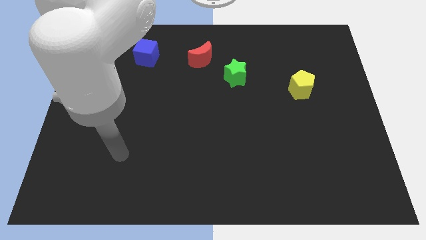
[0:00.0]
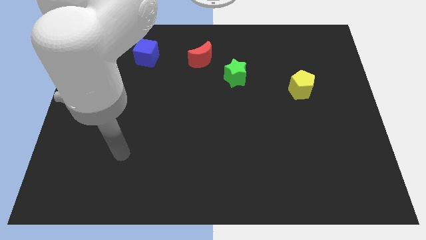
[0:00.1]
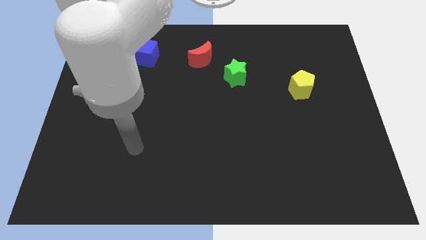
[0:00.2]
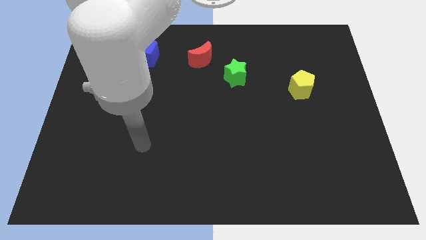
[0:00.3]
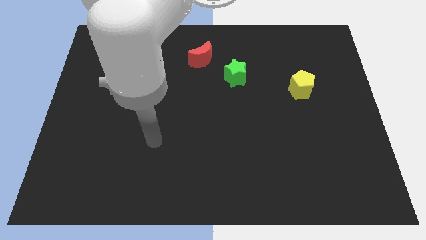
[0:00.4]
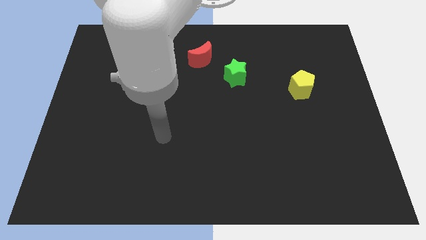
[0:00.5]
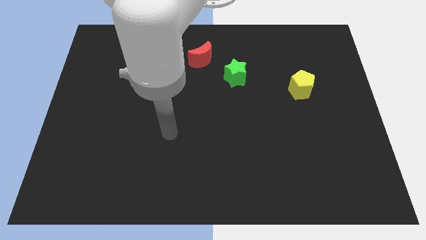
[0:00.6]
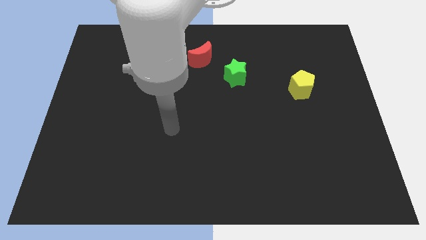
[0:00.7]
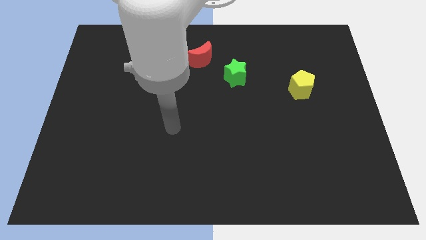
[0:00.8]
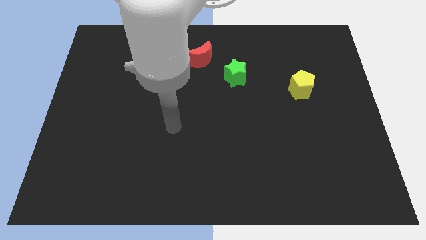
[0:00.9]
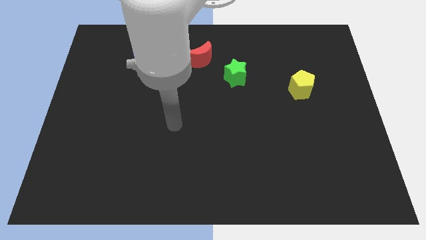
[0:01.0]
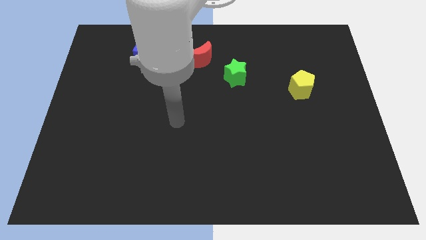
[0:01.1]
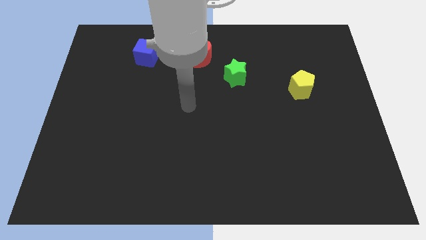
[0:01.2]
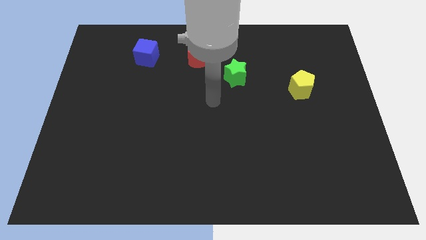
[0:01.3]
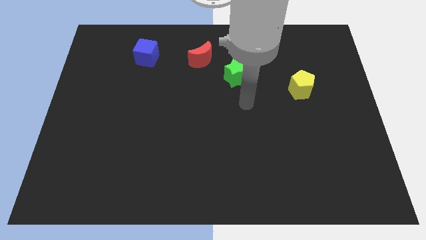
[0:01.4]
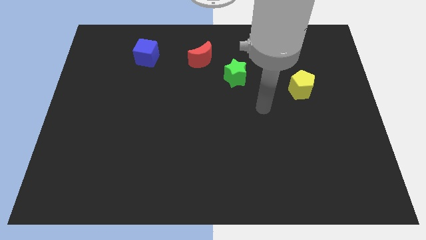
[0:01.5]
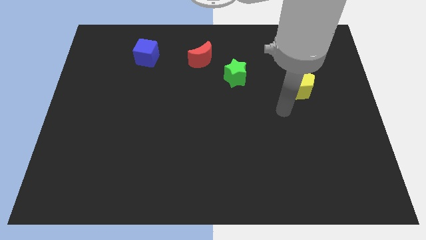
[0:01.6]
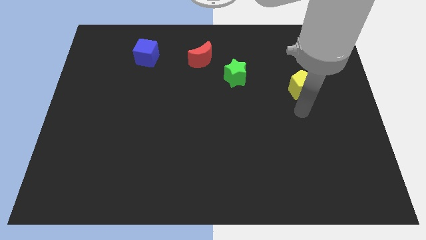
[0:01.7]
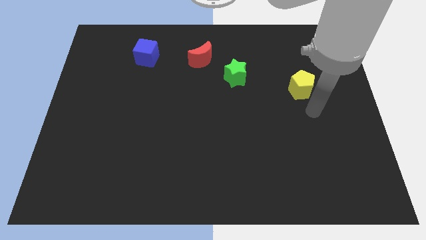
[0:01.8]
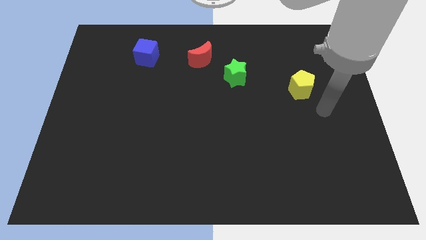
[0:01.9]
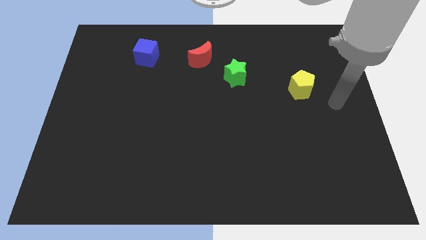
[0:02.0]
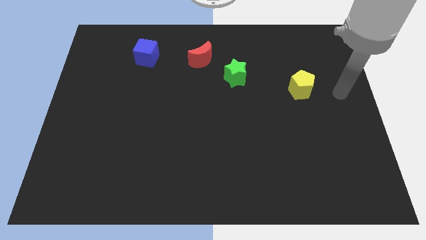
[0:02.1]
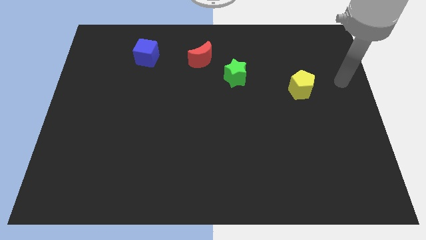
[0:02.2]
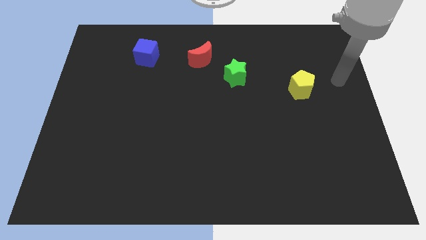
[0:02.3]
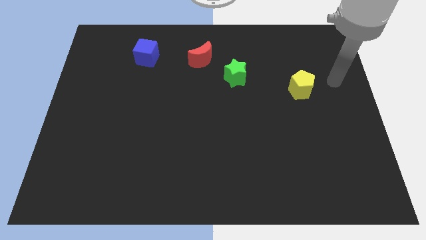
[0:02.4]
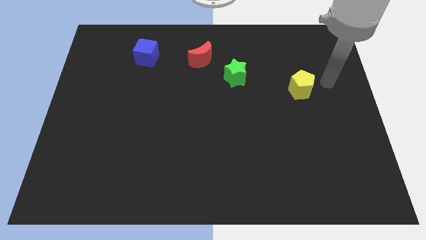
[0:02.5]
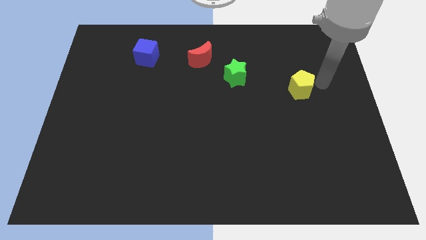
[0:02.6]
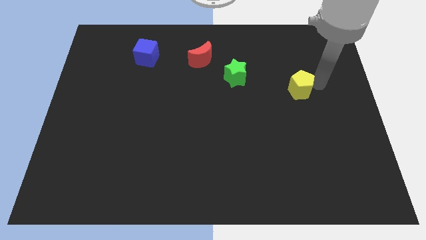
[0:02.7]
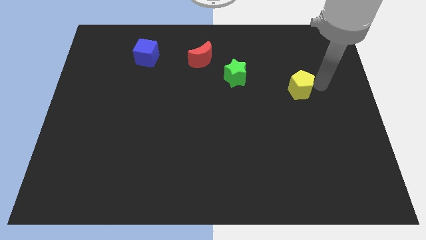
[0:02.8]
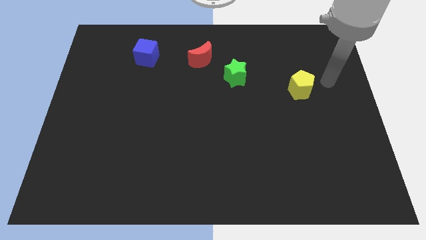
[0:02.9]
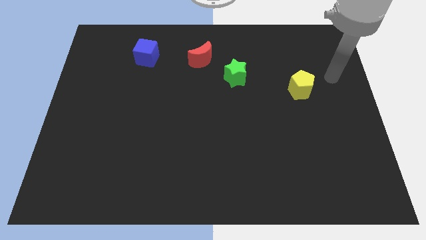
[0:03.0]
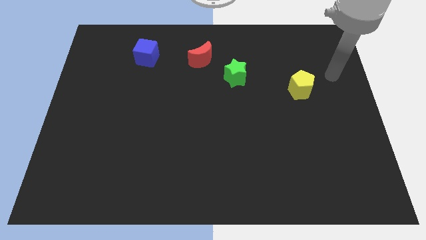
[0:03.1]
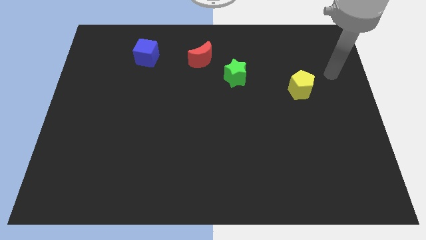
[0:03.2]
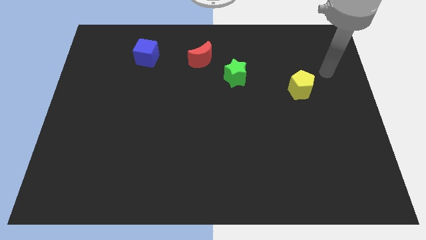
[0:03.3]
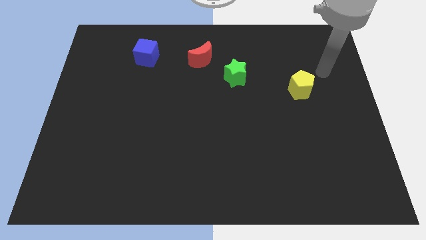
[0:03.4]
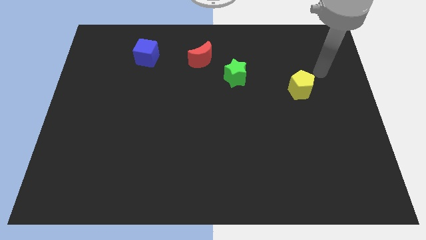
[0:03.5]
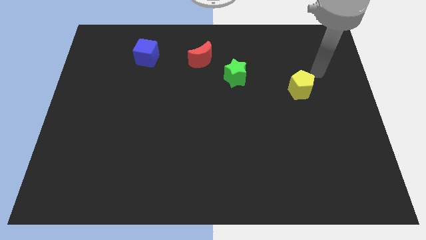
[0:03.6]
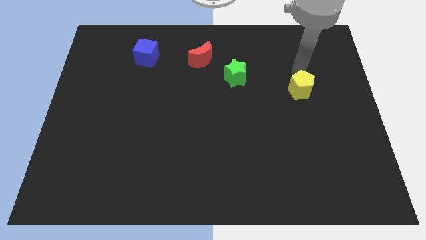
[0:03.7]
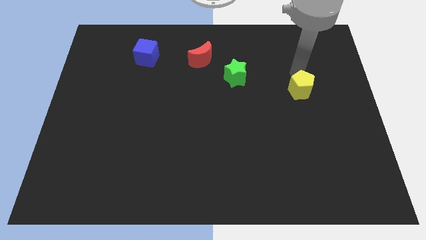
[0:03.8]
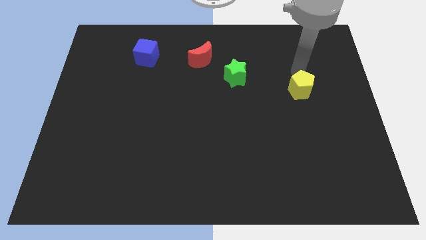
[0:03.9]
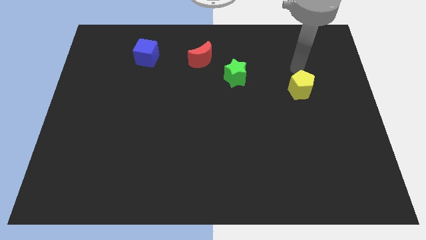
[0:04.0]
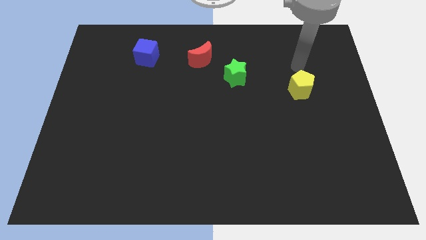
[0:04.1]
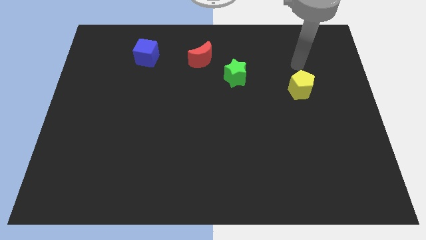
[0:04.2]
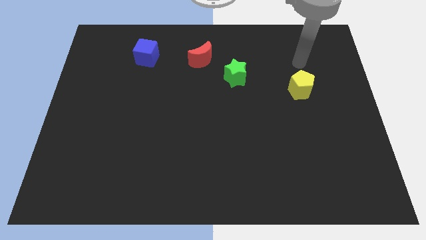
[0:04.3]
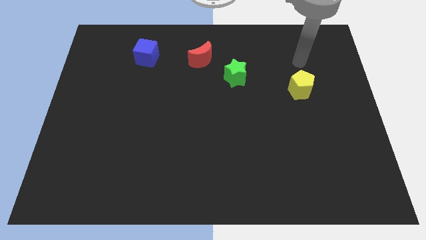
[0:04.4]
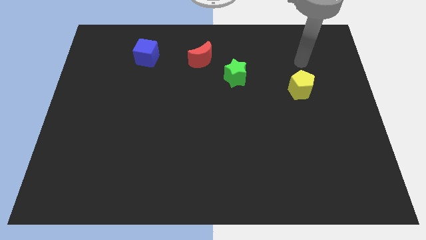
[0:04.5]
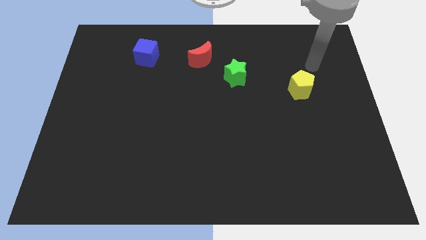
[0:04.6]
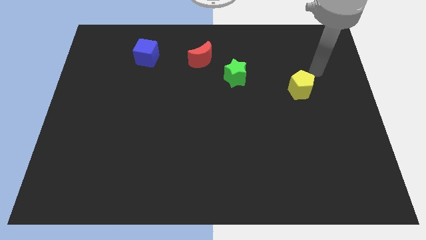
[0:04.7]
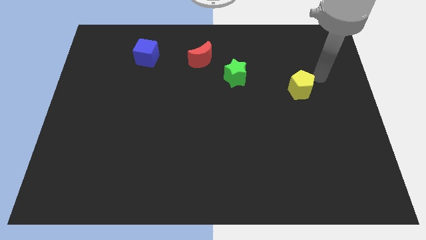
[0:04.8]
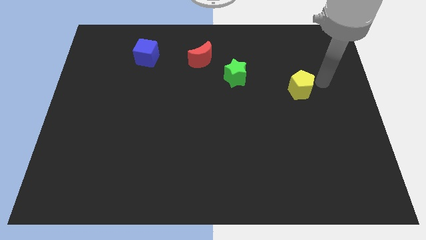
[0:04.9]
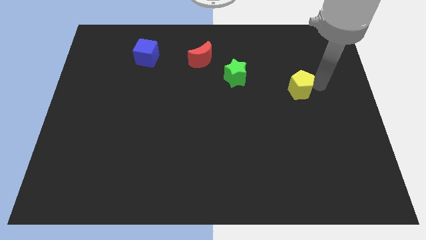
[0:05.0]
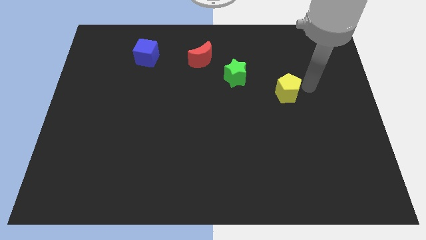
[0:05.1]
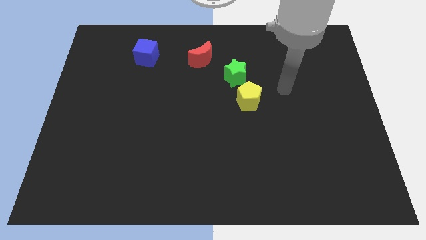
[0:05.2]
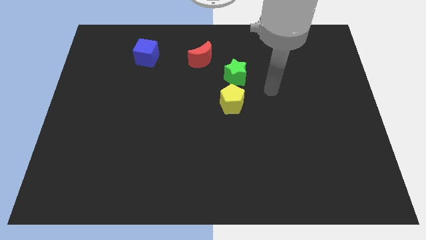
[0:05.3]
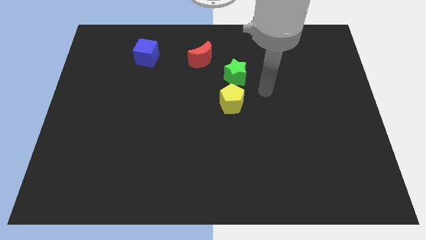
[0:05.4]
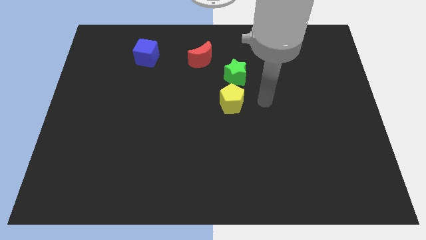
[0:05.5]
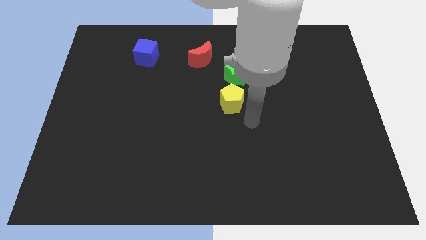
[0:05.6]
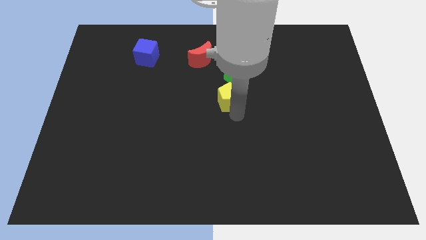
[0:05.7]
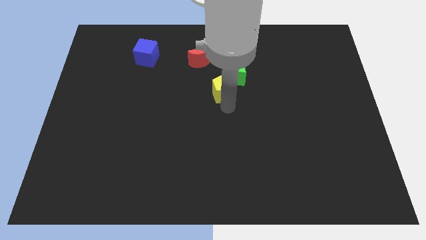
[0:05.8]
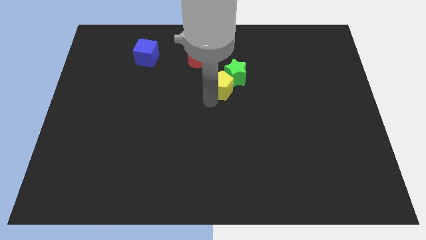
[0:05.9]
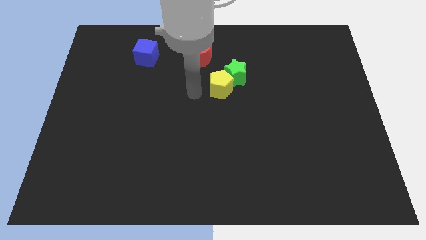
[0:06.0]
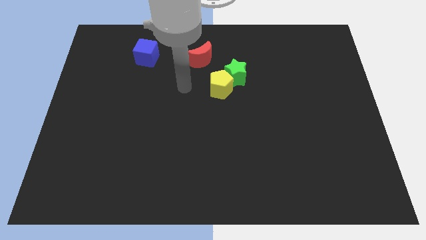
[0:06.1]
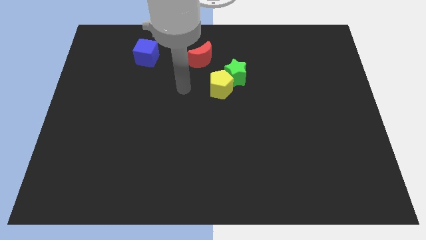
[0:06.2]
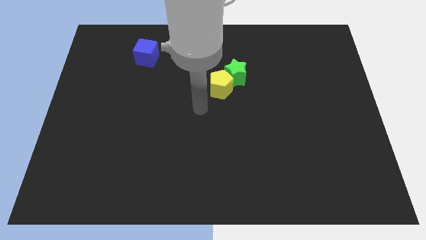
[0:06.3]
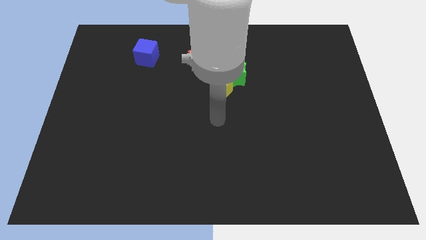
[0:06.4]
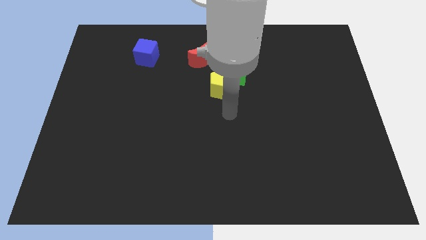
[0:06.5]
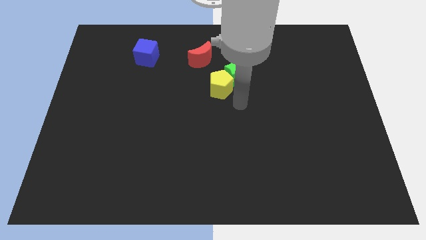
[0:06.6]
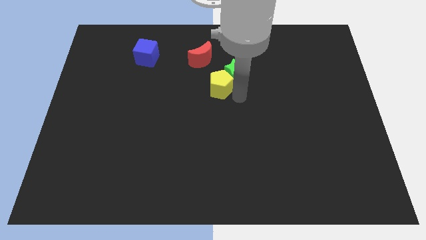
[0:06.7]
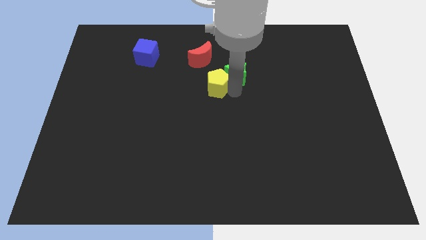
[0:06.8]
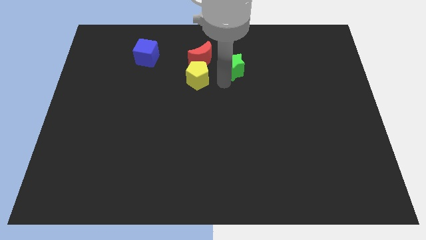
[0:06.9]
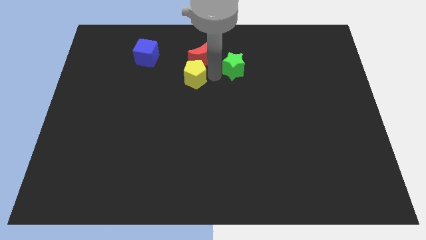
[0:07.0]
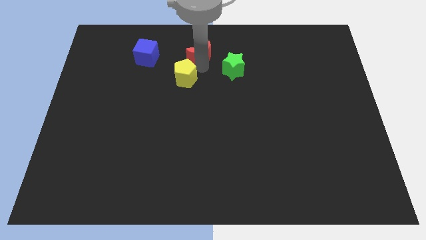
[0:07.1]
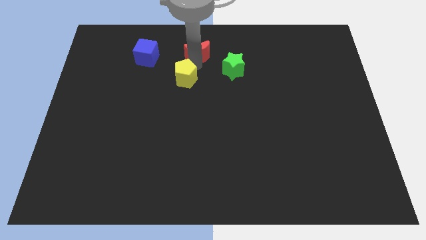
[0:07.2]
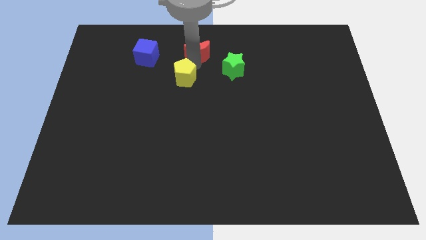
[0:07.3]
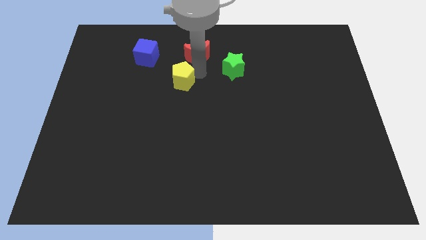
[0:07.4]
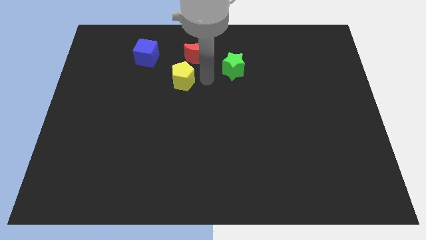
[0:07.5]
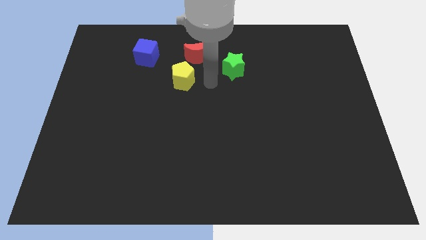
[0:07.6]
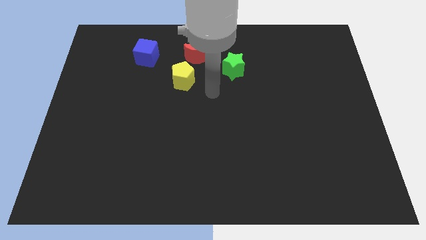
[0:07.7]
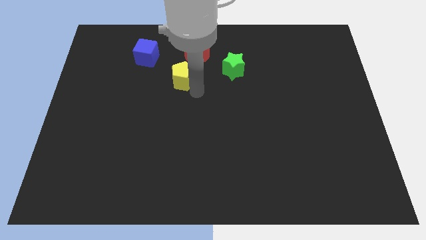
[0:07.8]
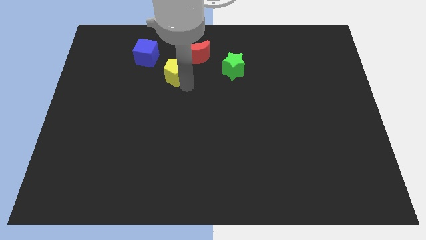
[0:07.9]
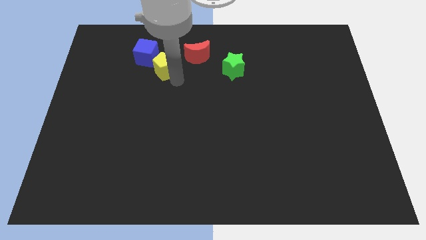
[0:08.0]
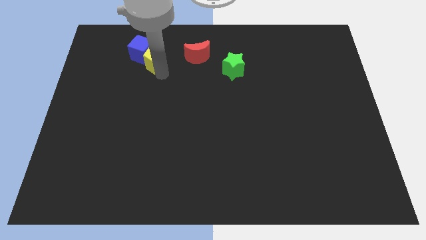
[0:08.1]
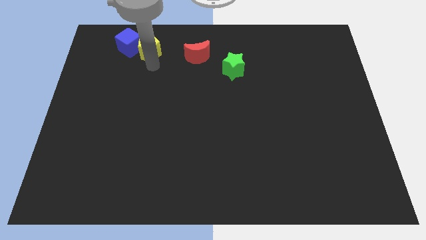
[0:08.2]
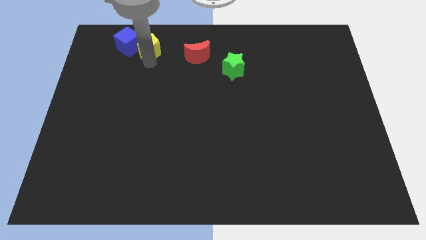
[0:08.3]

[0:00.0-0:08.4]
put the pentagon close to the cube

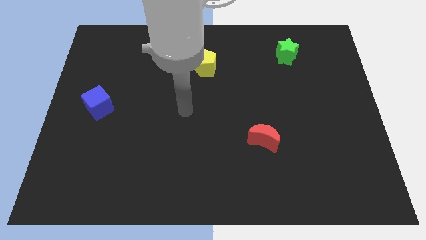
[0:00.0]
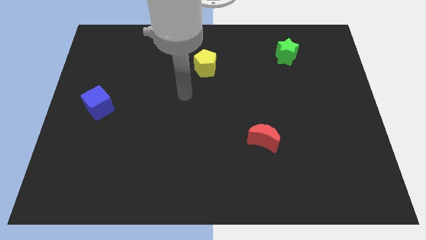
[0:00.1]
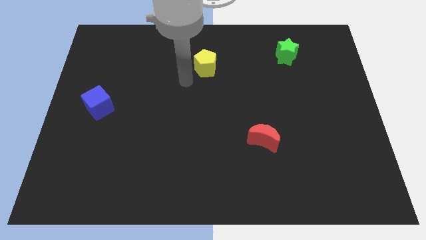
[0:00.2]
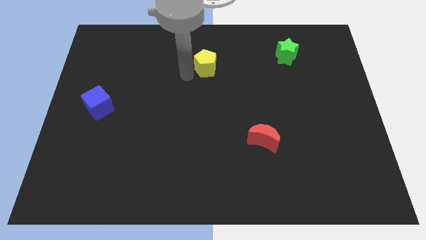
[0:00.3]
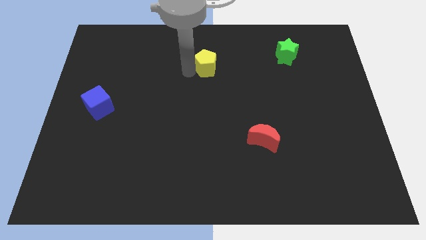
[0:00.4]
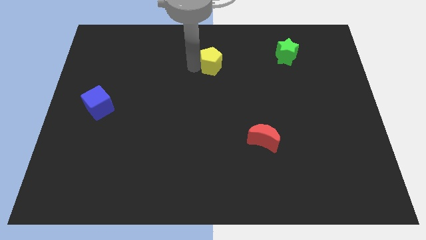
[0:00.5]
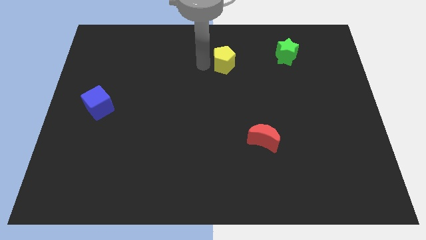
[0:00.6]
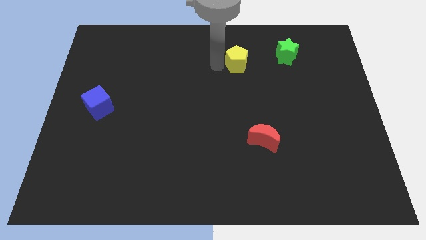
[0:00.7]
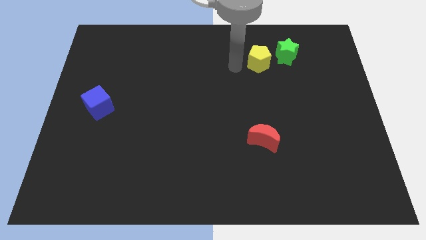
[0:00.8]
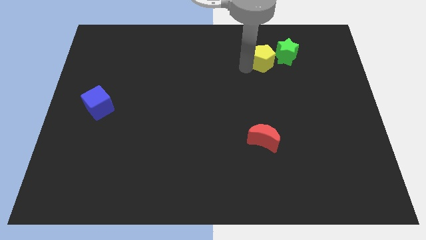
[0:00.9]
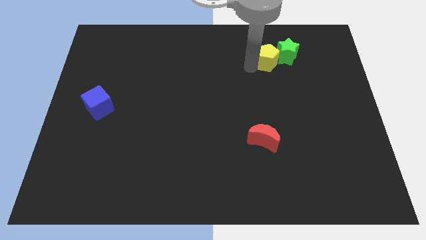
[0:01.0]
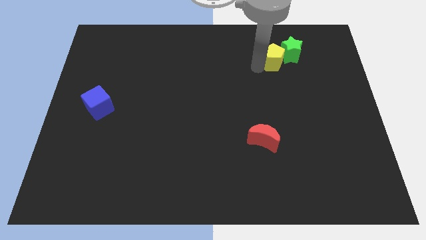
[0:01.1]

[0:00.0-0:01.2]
push the pentagon next to the star
